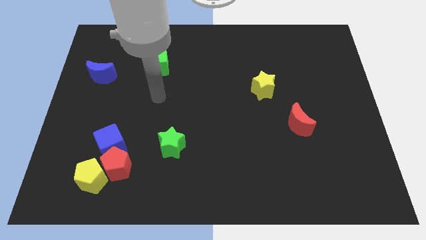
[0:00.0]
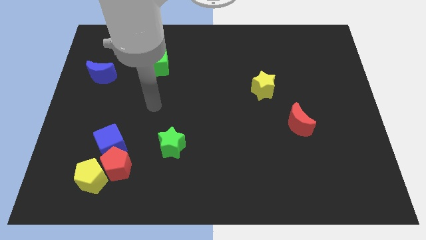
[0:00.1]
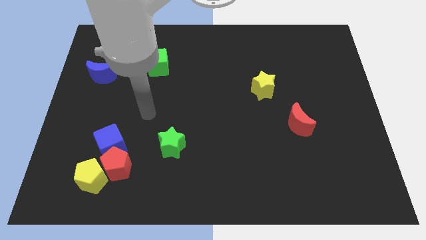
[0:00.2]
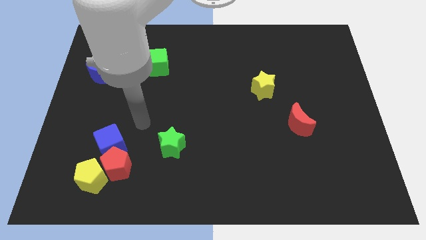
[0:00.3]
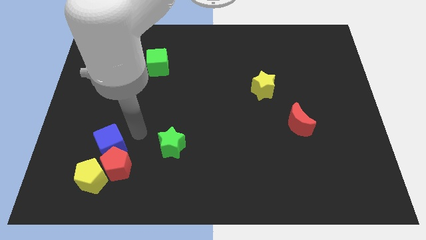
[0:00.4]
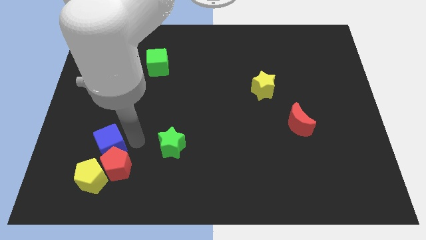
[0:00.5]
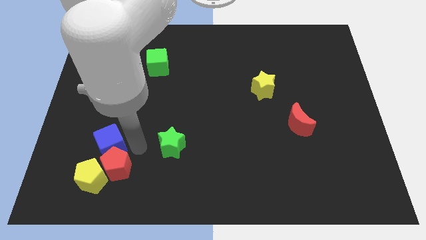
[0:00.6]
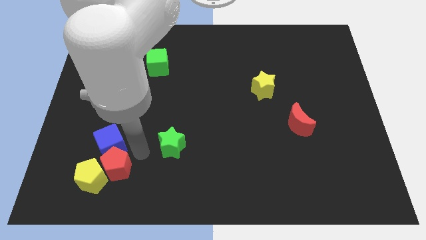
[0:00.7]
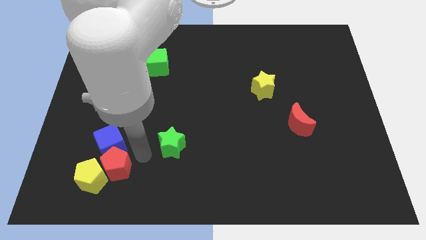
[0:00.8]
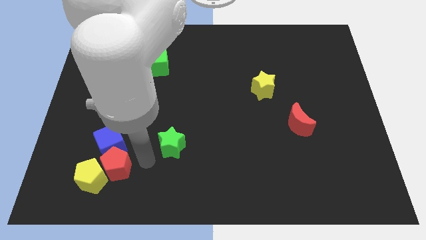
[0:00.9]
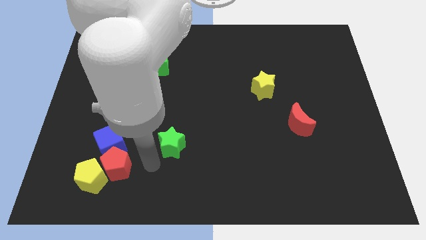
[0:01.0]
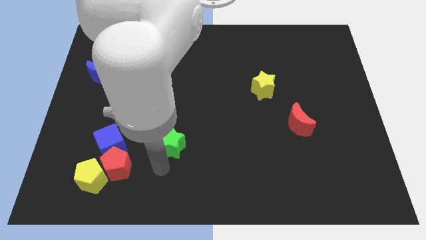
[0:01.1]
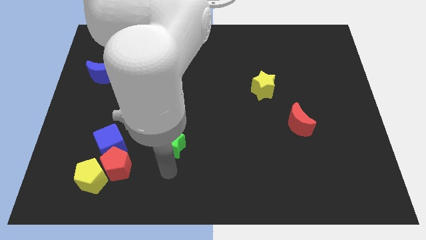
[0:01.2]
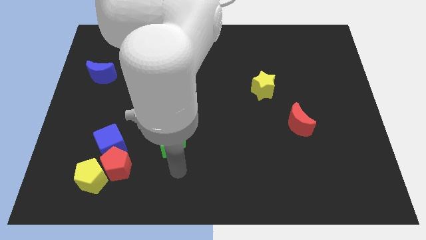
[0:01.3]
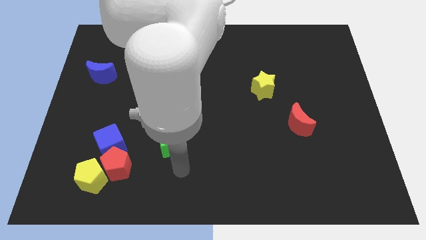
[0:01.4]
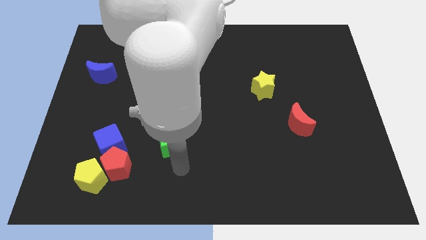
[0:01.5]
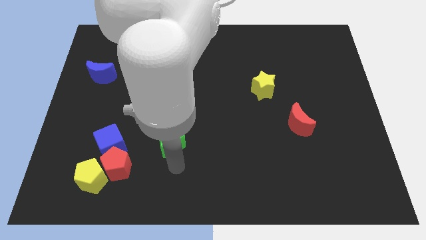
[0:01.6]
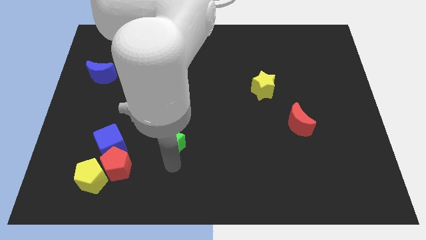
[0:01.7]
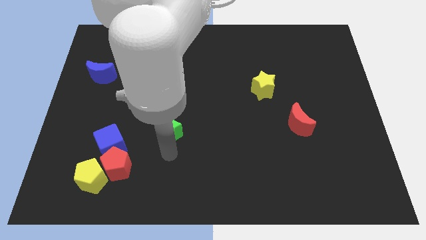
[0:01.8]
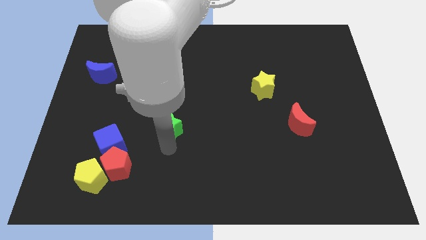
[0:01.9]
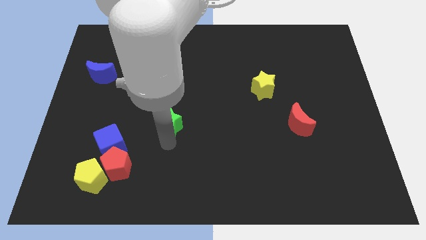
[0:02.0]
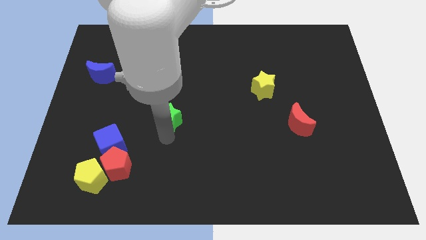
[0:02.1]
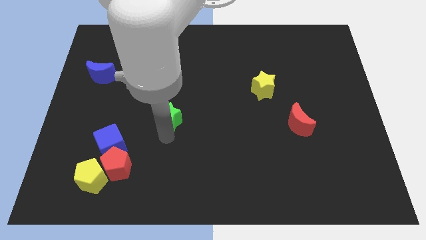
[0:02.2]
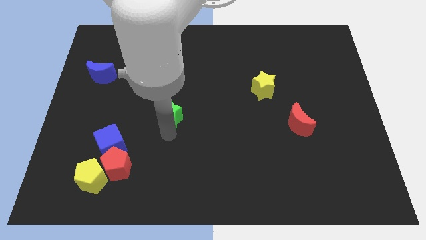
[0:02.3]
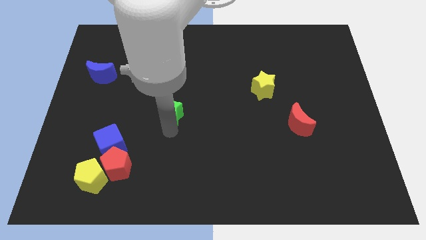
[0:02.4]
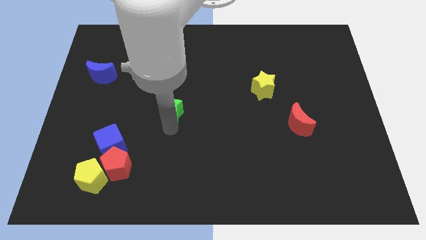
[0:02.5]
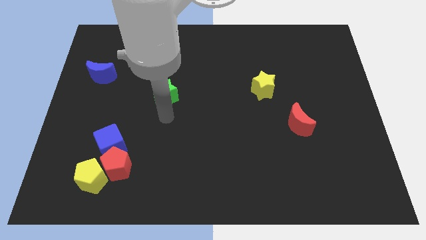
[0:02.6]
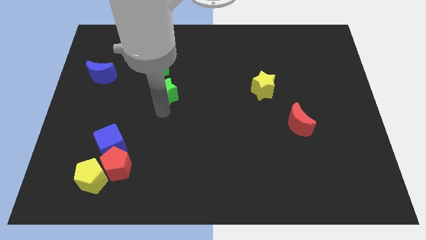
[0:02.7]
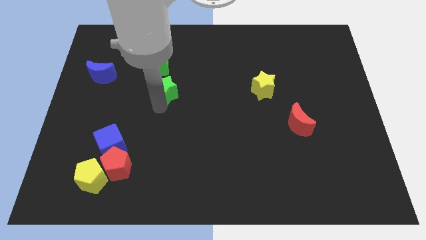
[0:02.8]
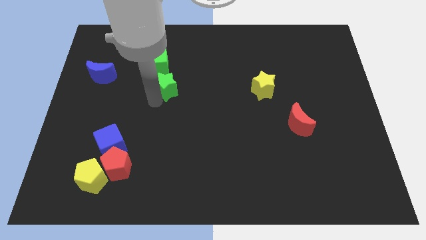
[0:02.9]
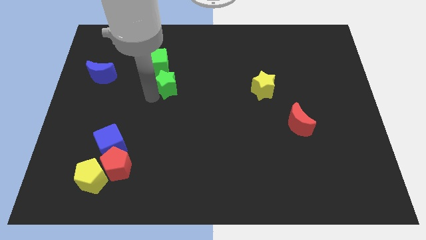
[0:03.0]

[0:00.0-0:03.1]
slide the green star close to the green cube

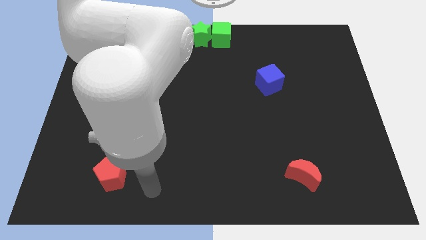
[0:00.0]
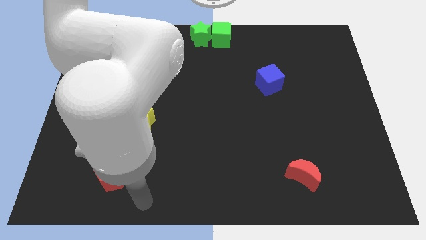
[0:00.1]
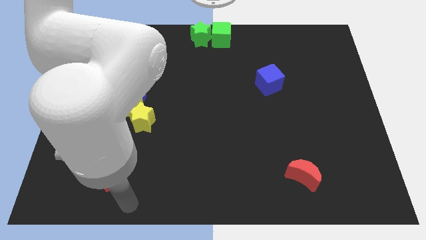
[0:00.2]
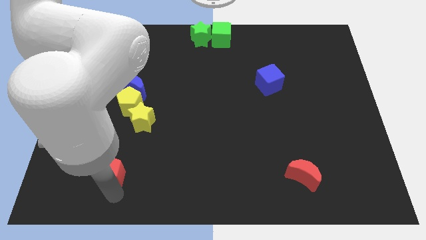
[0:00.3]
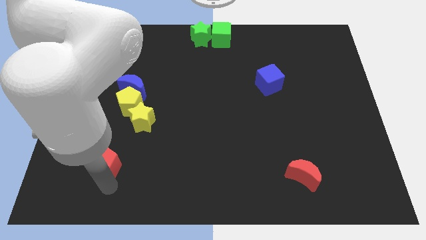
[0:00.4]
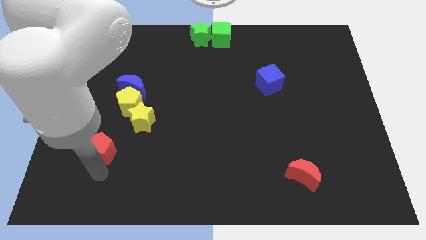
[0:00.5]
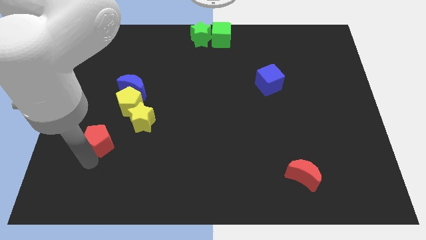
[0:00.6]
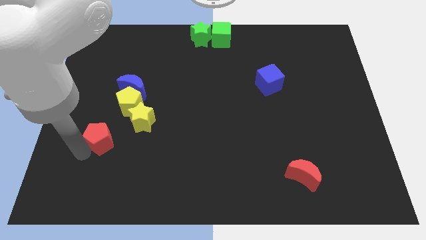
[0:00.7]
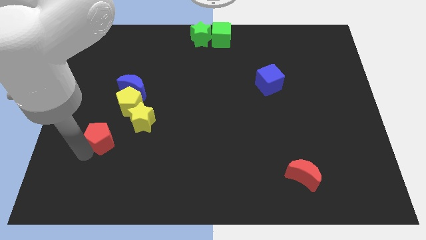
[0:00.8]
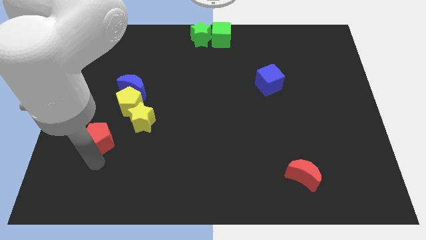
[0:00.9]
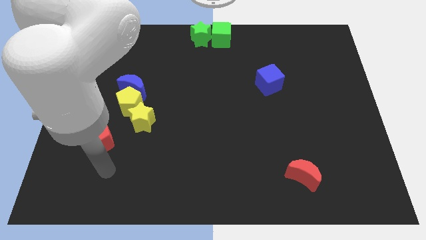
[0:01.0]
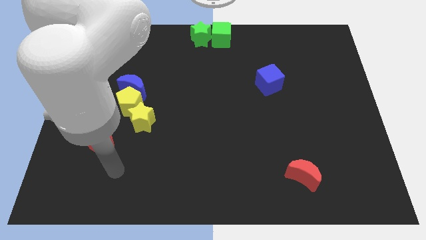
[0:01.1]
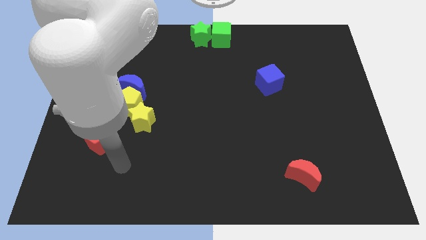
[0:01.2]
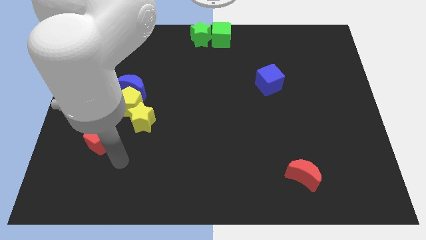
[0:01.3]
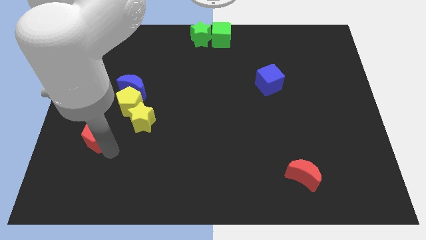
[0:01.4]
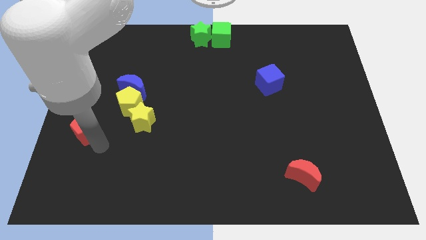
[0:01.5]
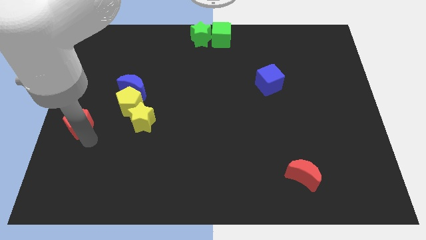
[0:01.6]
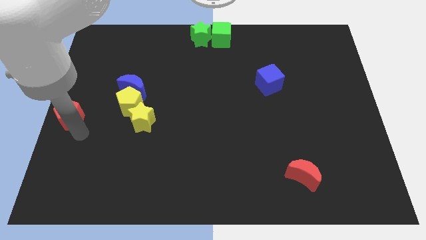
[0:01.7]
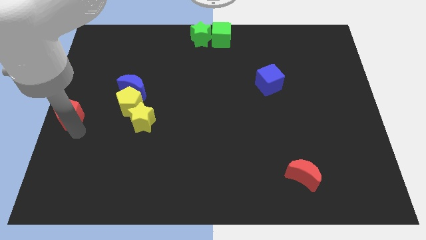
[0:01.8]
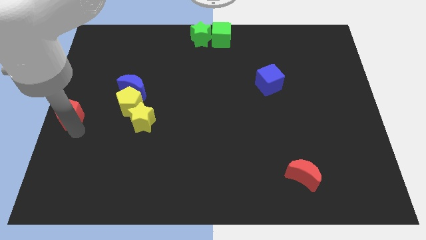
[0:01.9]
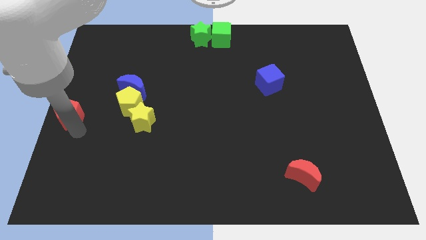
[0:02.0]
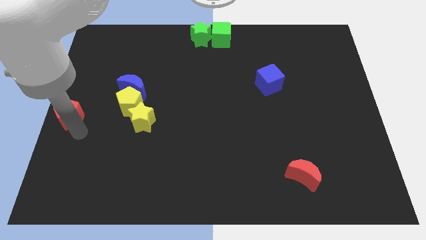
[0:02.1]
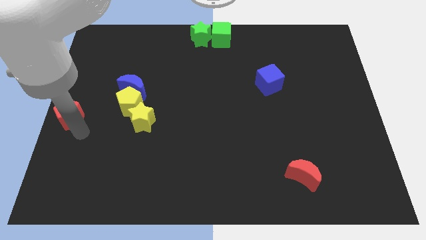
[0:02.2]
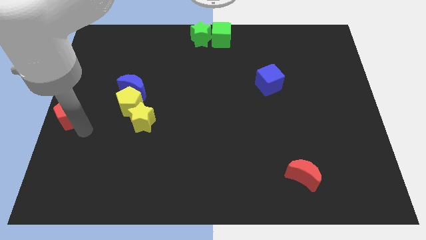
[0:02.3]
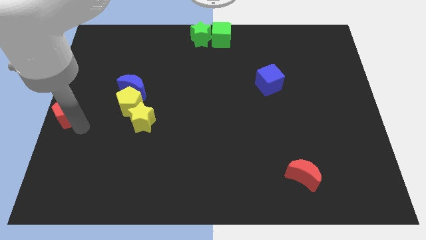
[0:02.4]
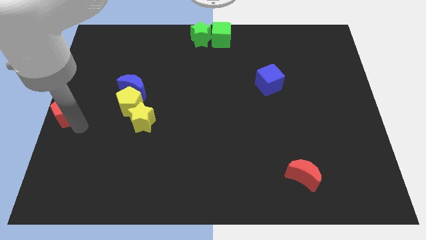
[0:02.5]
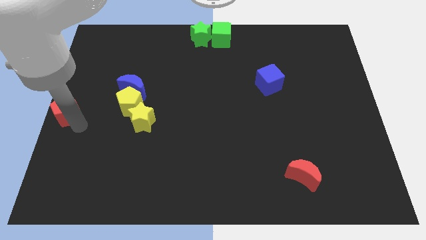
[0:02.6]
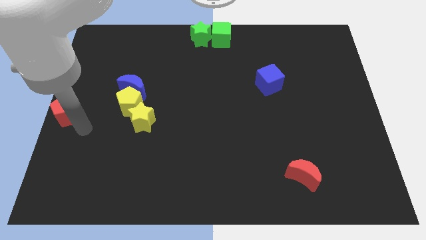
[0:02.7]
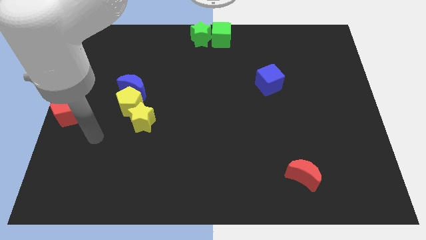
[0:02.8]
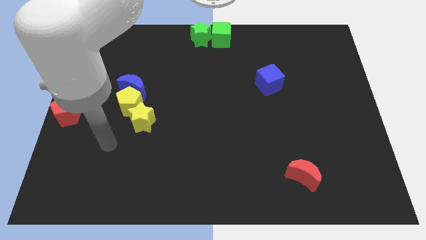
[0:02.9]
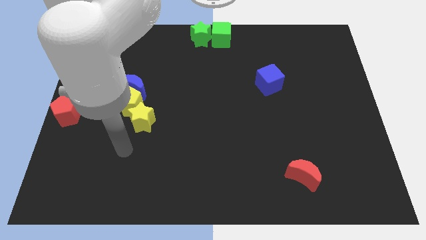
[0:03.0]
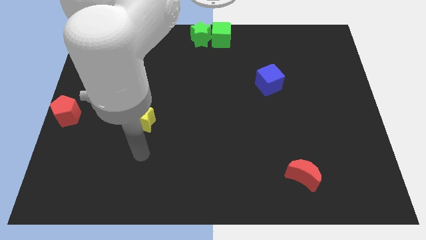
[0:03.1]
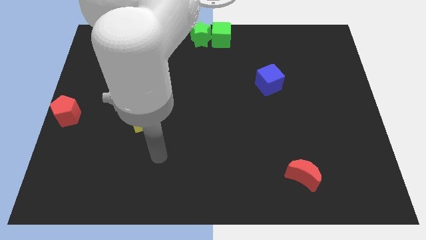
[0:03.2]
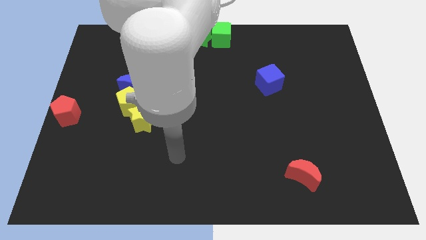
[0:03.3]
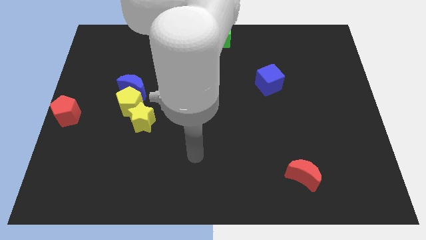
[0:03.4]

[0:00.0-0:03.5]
move the red pentagon to the middle left

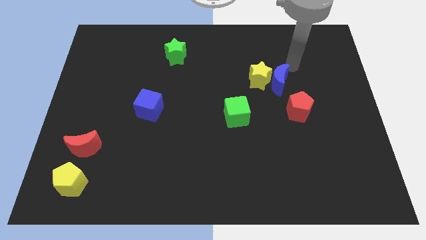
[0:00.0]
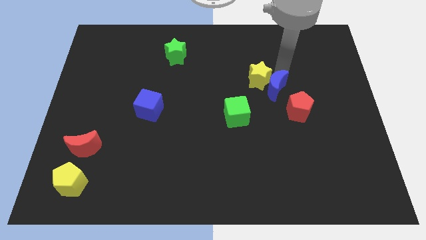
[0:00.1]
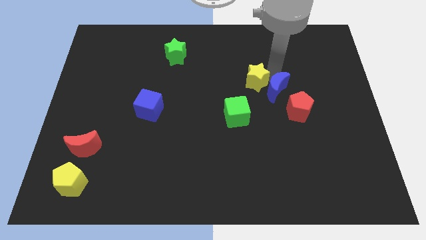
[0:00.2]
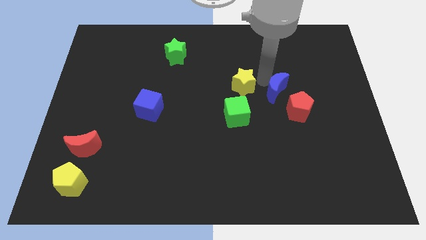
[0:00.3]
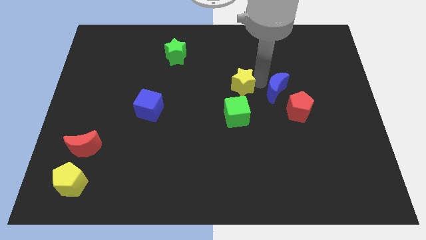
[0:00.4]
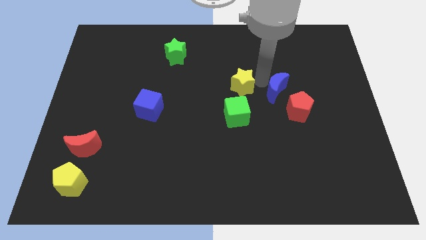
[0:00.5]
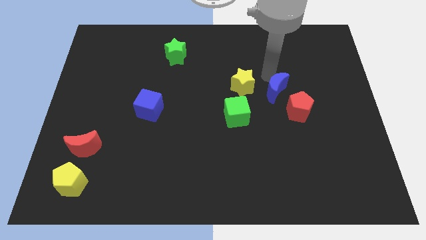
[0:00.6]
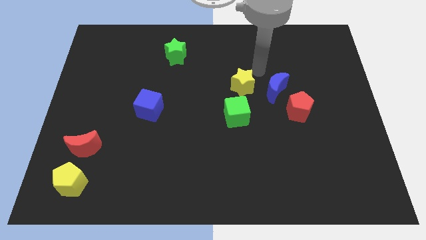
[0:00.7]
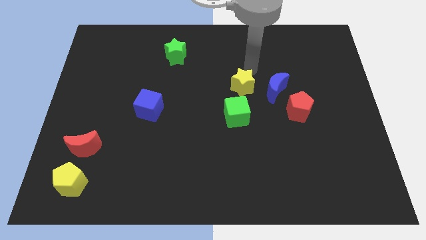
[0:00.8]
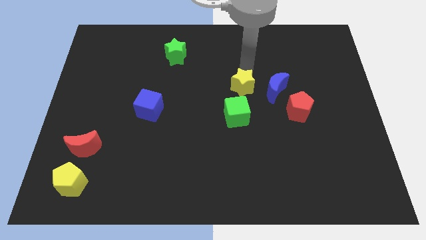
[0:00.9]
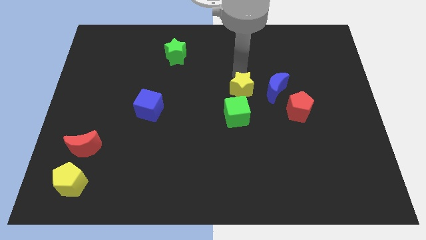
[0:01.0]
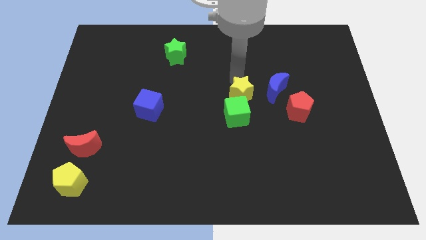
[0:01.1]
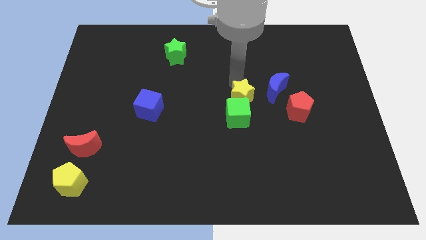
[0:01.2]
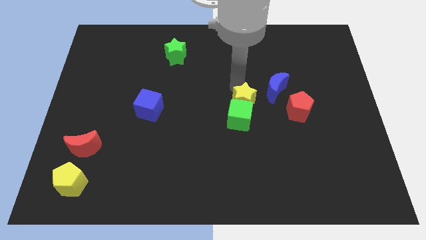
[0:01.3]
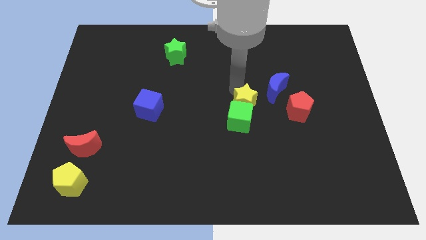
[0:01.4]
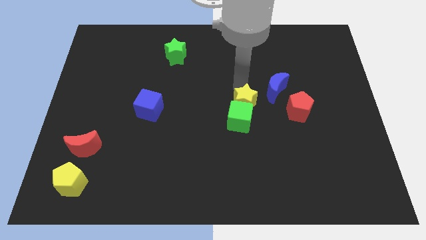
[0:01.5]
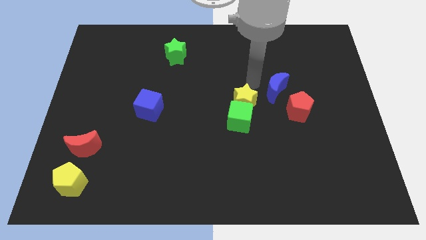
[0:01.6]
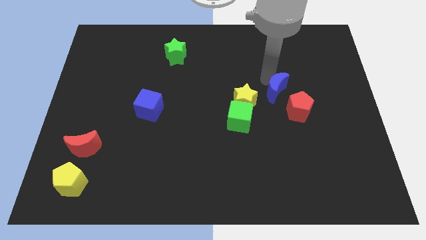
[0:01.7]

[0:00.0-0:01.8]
push the yellow star into the green cube

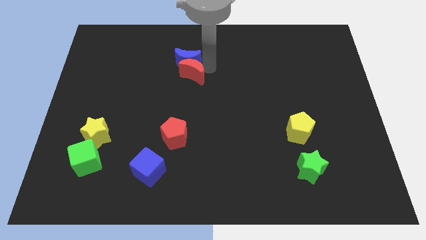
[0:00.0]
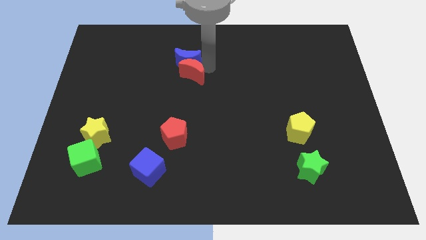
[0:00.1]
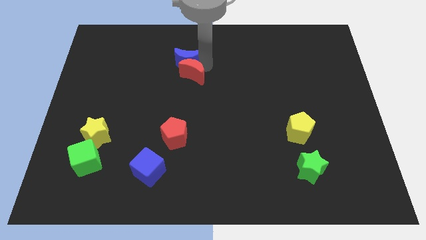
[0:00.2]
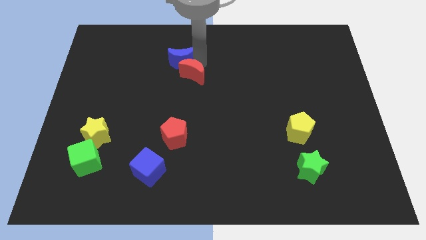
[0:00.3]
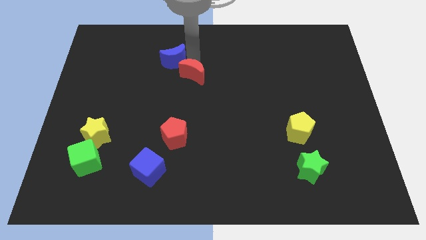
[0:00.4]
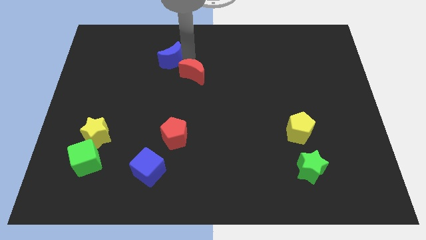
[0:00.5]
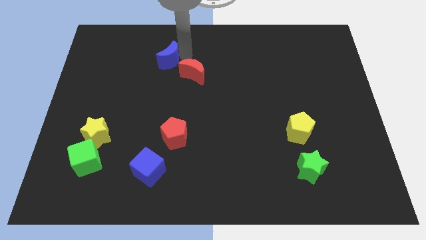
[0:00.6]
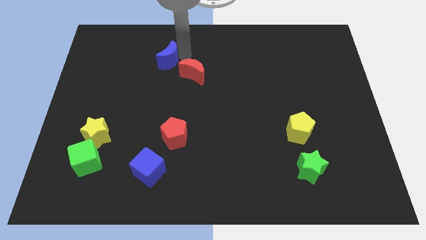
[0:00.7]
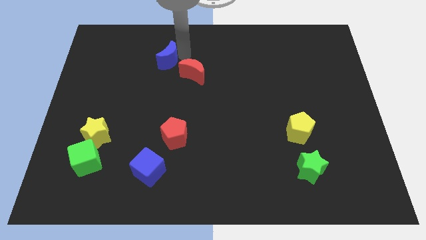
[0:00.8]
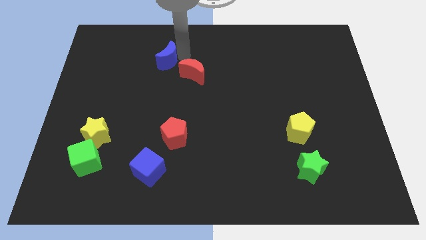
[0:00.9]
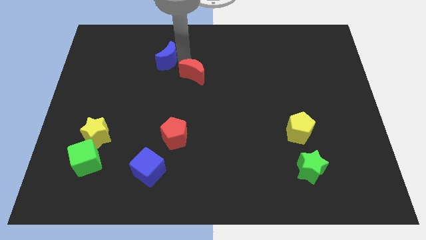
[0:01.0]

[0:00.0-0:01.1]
push the blue moon to the top left side of the red moon
